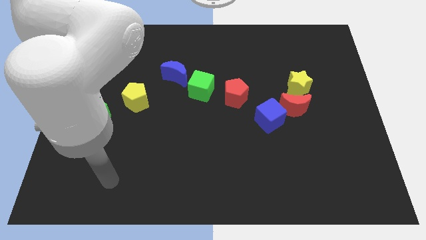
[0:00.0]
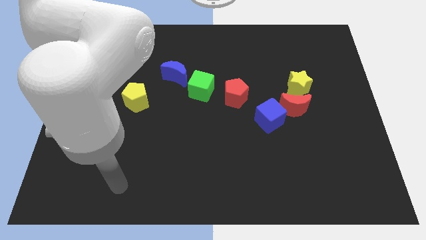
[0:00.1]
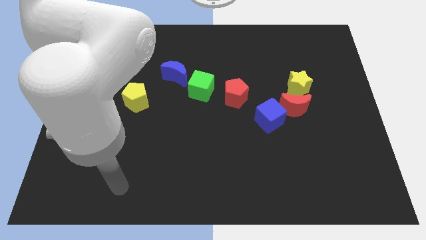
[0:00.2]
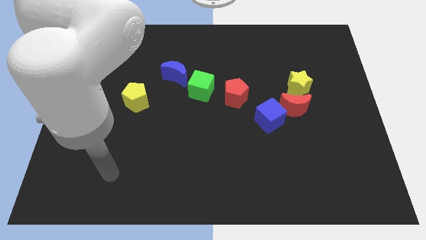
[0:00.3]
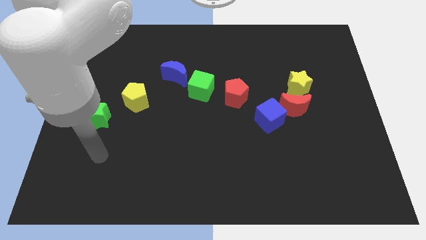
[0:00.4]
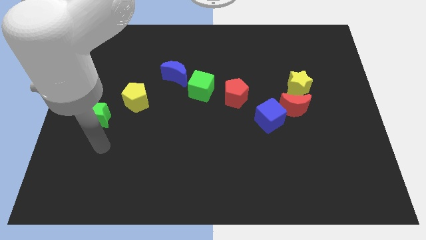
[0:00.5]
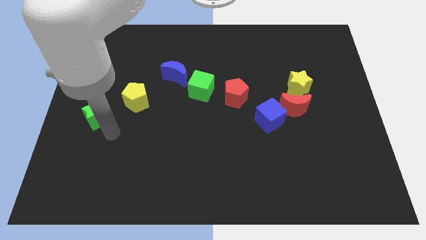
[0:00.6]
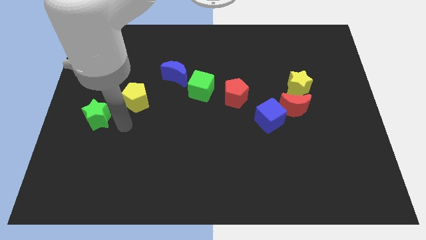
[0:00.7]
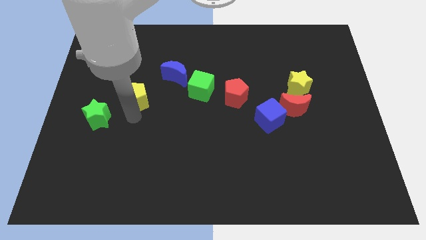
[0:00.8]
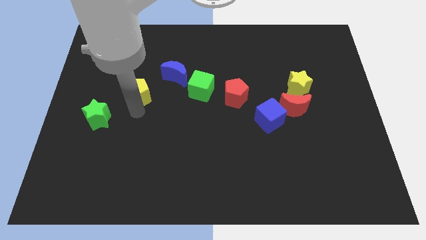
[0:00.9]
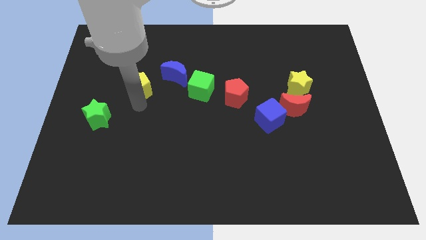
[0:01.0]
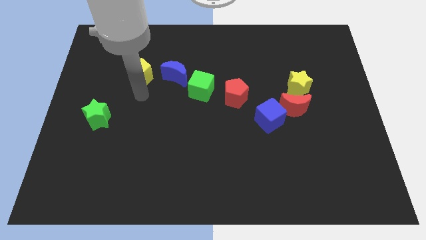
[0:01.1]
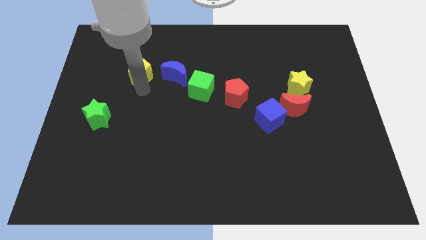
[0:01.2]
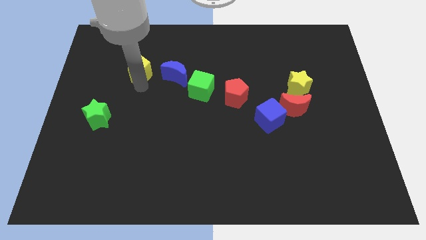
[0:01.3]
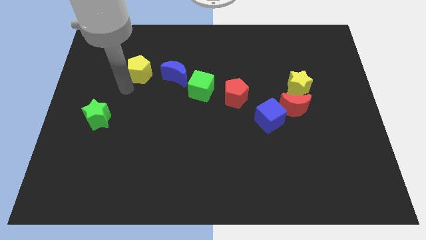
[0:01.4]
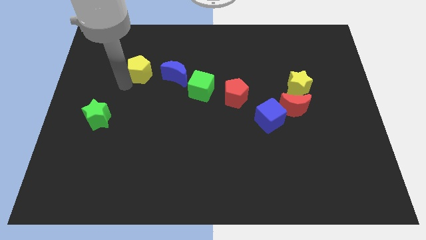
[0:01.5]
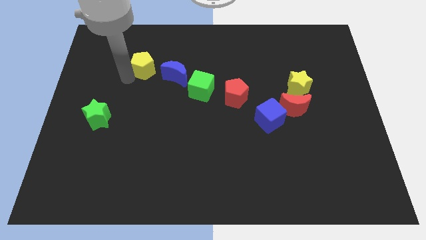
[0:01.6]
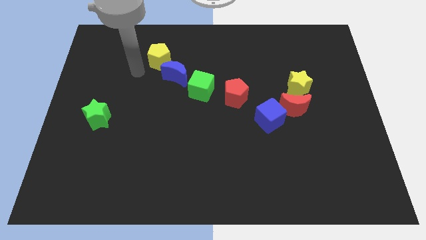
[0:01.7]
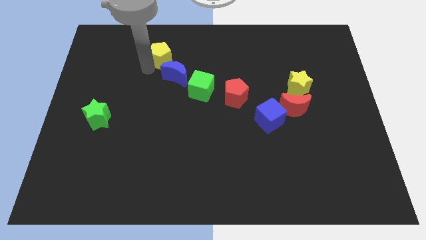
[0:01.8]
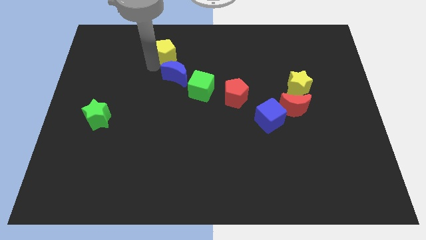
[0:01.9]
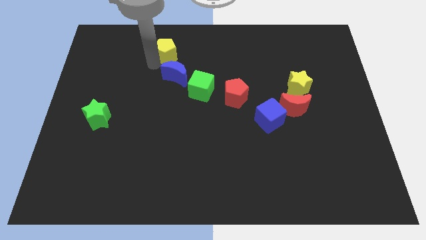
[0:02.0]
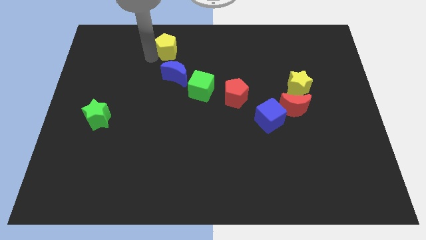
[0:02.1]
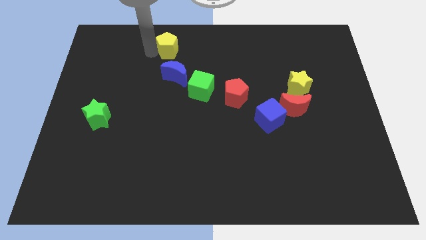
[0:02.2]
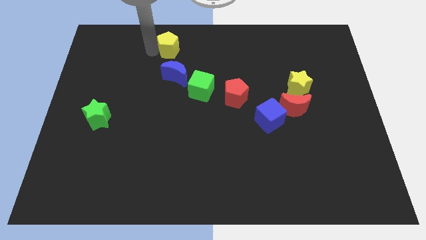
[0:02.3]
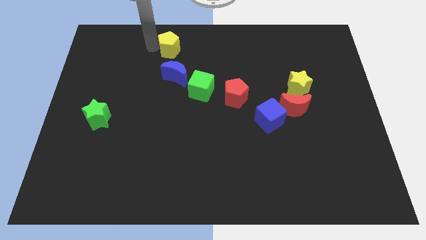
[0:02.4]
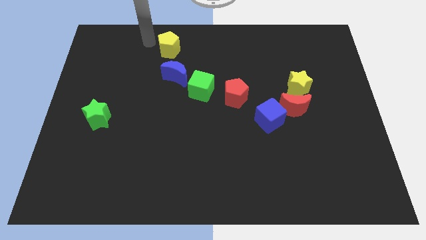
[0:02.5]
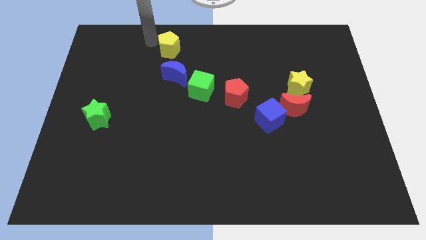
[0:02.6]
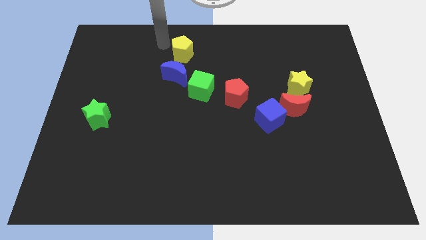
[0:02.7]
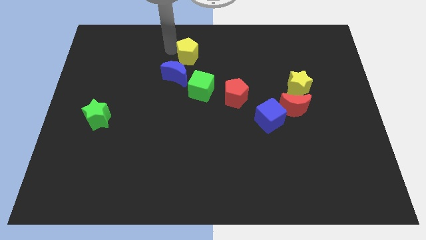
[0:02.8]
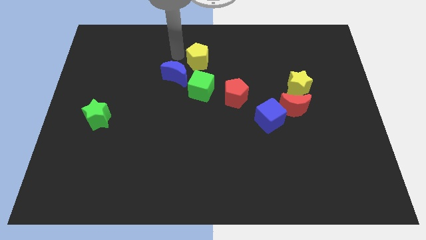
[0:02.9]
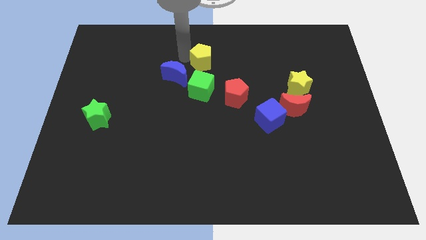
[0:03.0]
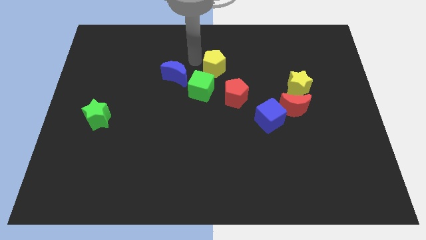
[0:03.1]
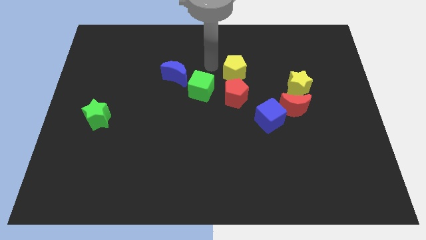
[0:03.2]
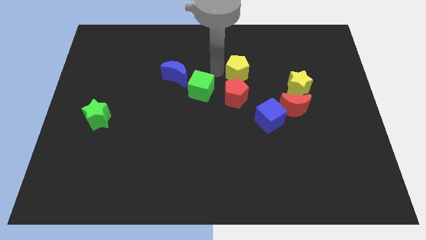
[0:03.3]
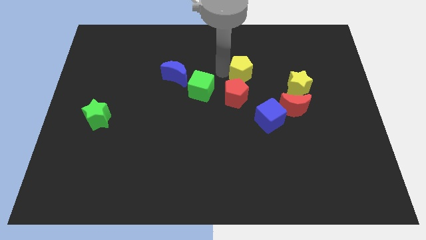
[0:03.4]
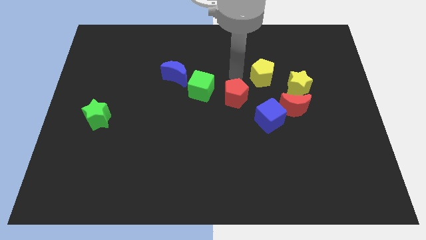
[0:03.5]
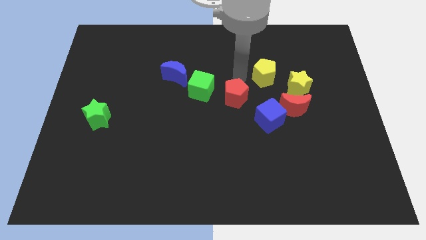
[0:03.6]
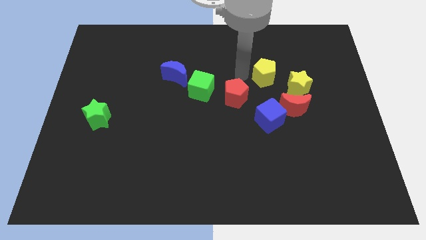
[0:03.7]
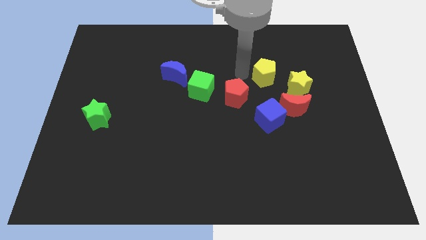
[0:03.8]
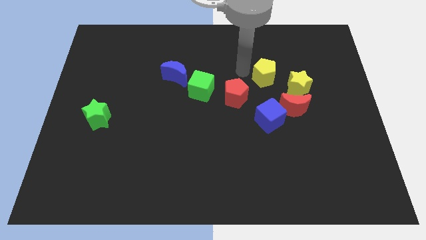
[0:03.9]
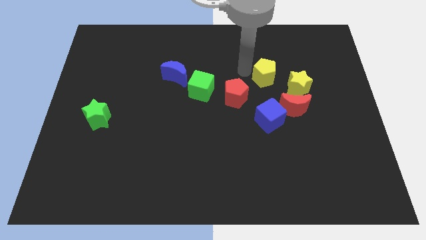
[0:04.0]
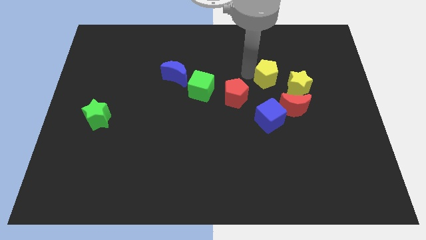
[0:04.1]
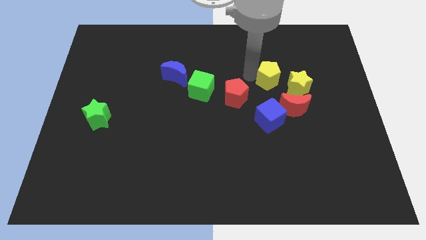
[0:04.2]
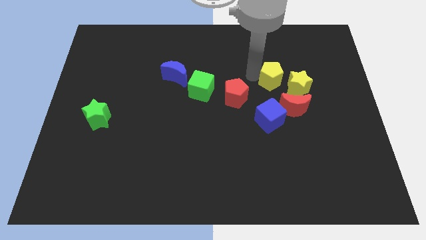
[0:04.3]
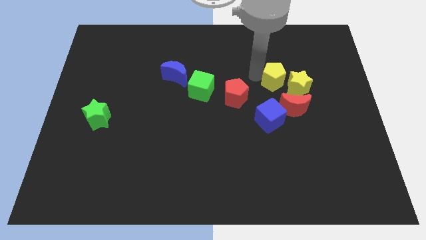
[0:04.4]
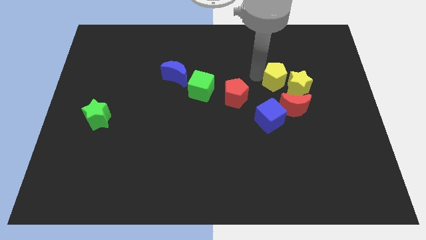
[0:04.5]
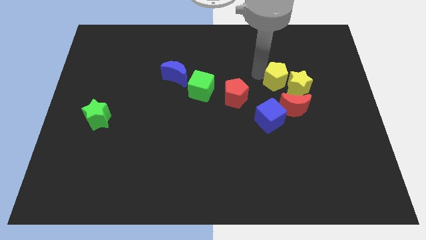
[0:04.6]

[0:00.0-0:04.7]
put the yellow pentagon towards the yellow star

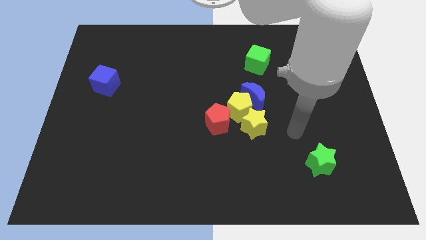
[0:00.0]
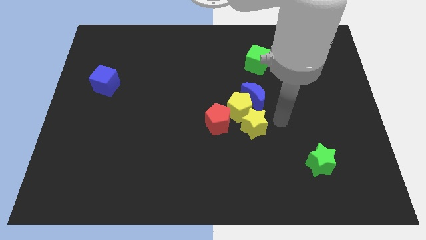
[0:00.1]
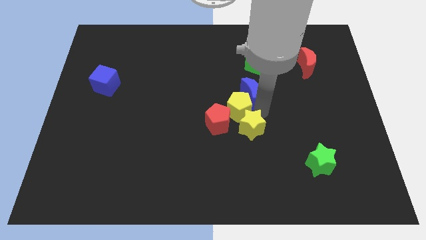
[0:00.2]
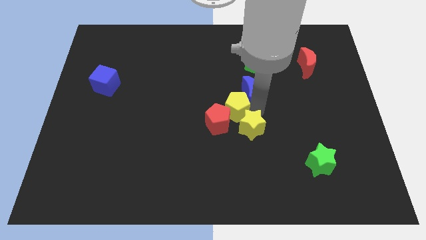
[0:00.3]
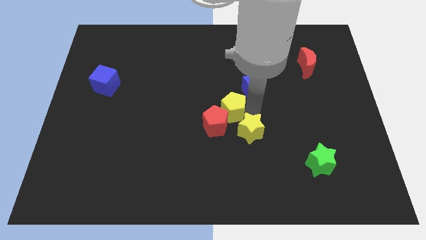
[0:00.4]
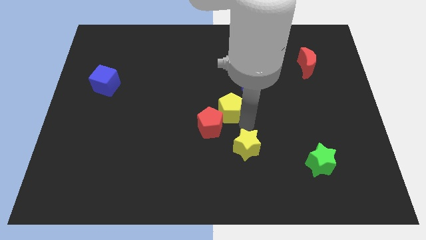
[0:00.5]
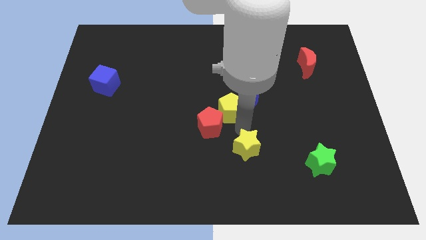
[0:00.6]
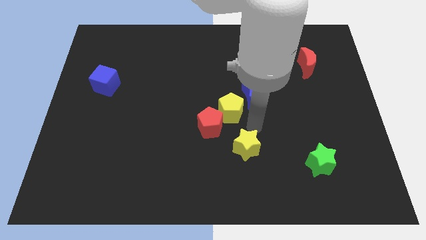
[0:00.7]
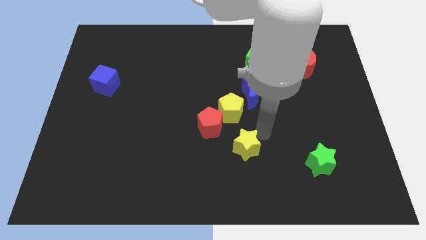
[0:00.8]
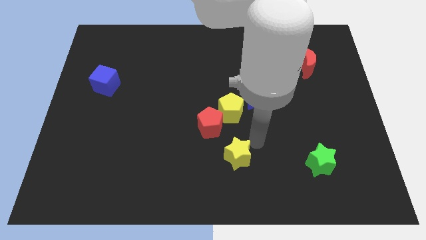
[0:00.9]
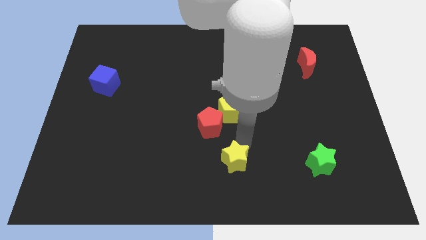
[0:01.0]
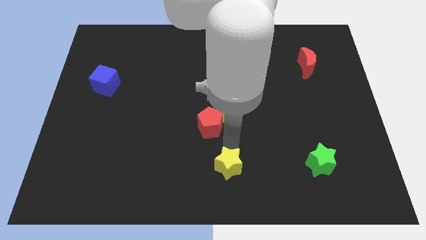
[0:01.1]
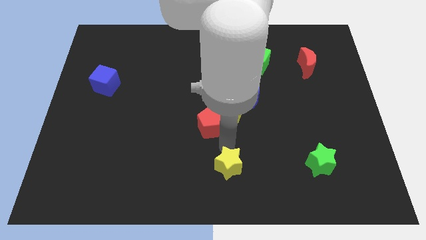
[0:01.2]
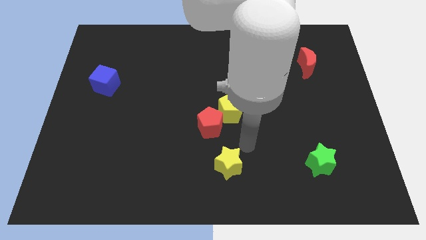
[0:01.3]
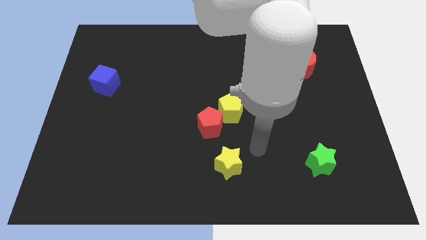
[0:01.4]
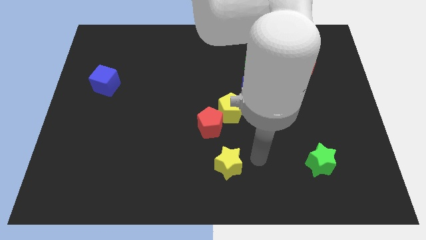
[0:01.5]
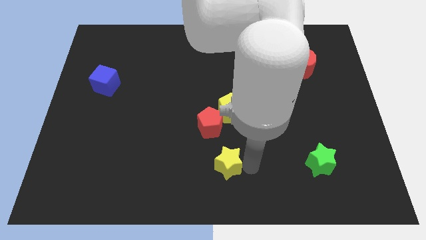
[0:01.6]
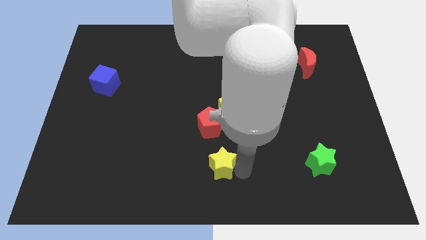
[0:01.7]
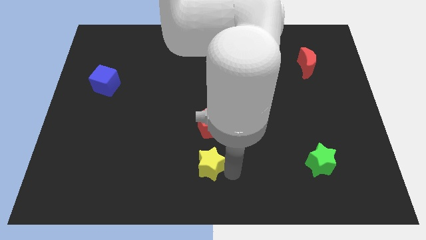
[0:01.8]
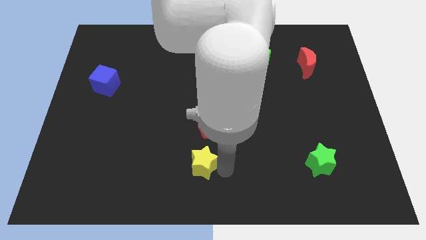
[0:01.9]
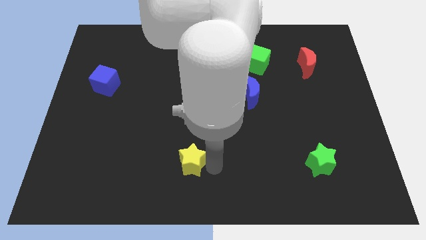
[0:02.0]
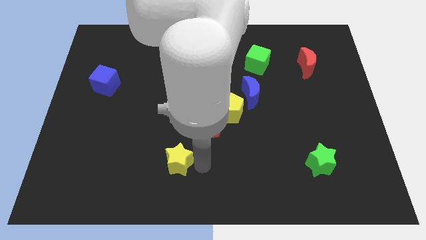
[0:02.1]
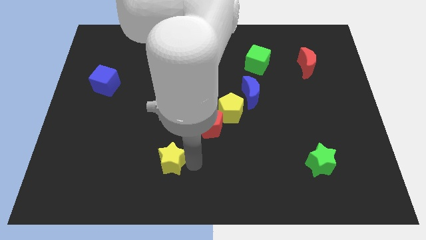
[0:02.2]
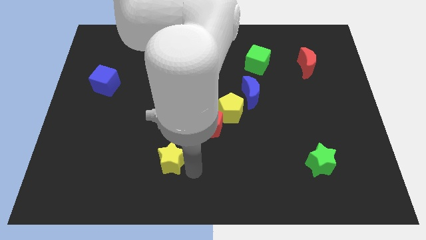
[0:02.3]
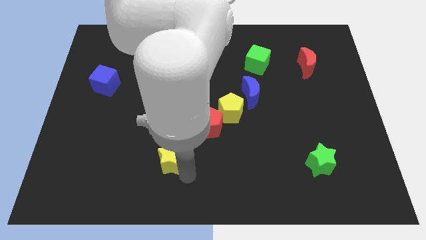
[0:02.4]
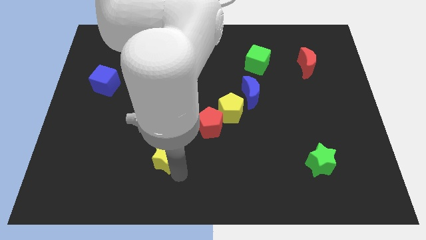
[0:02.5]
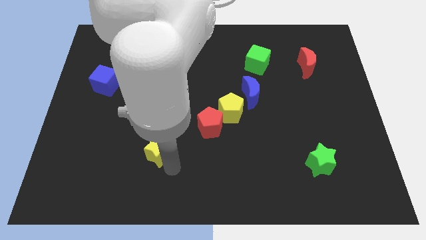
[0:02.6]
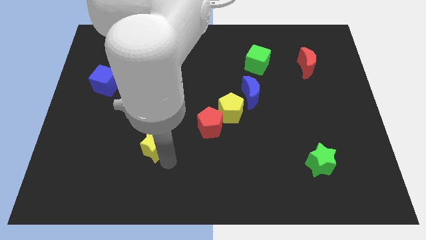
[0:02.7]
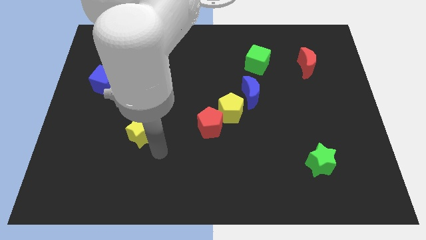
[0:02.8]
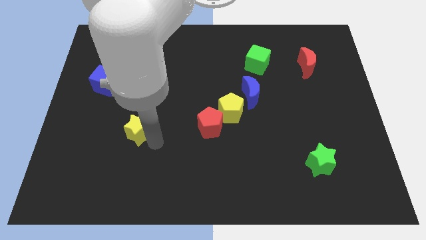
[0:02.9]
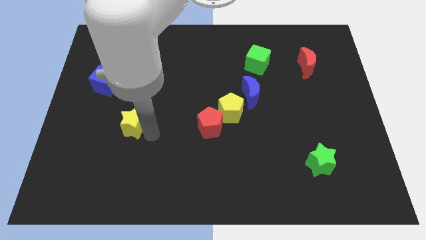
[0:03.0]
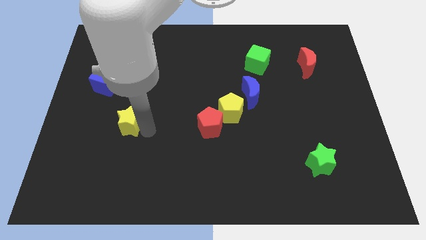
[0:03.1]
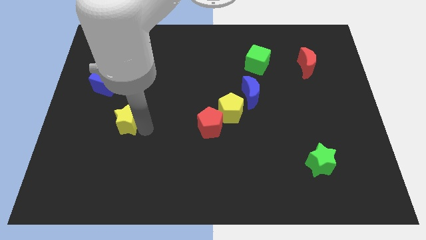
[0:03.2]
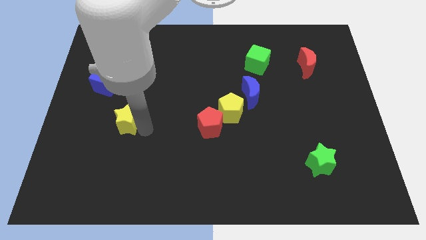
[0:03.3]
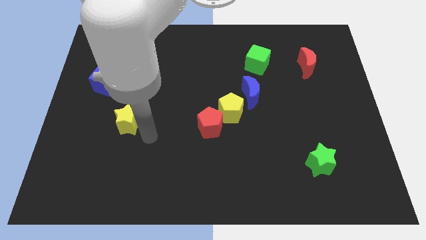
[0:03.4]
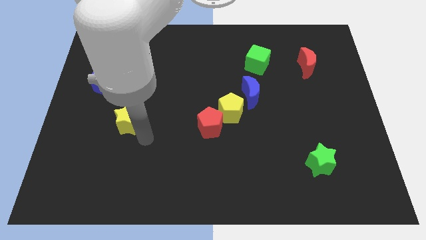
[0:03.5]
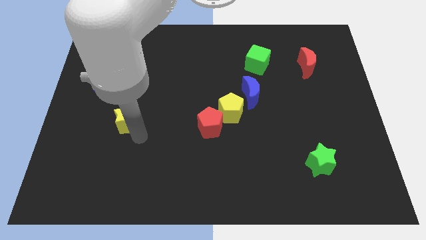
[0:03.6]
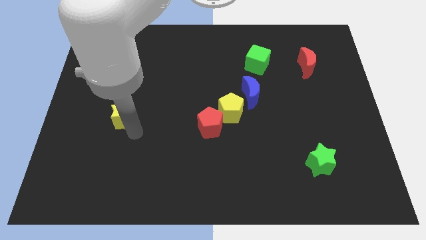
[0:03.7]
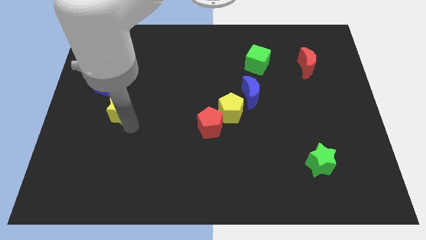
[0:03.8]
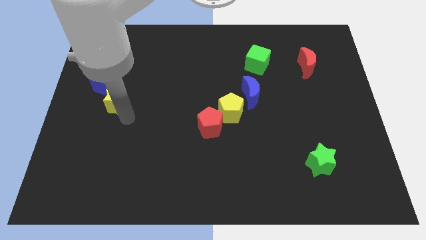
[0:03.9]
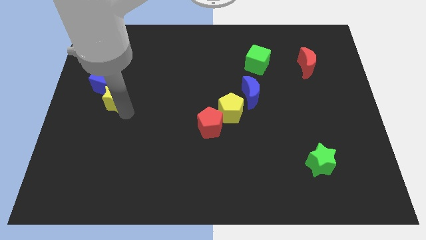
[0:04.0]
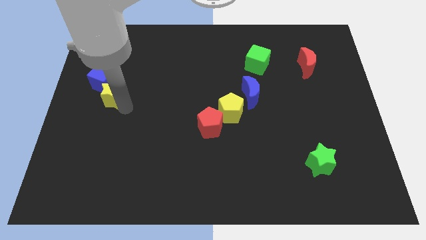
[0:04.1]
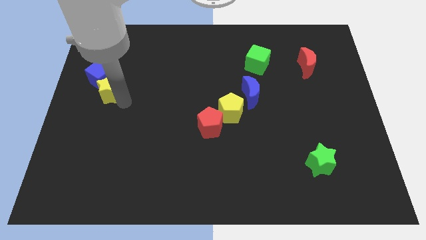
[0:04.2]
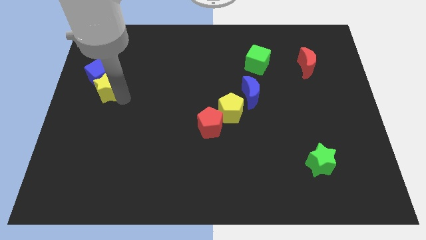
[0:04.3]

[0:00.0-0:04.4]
push the yellow star towards the blue cube
